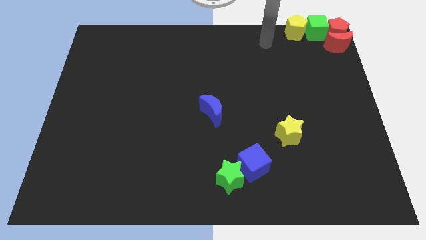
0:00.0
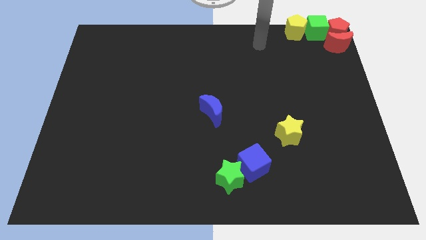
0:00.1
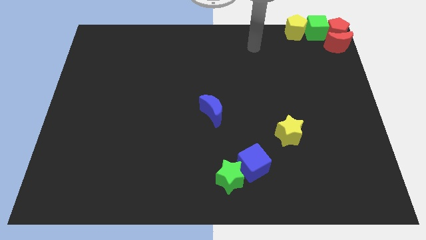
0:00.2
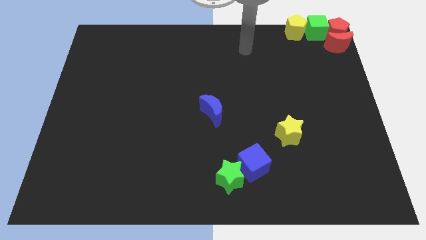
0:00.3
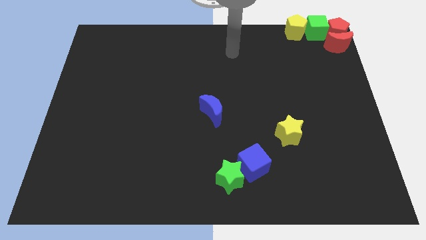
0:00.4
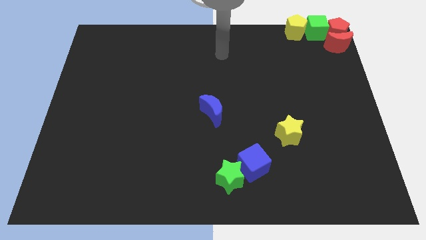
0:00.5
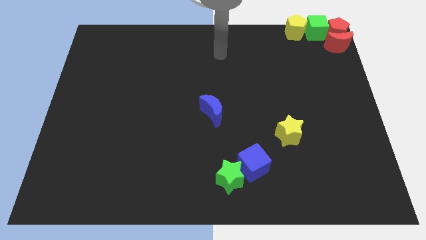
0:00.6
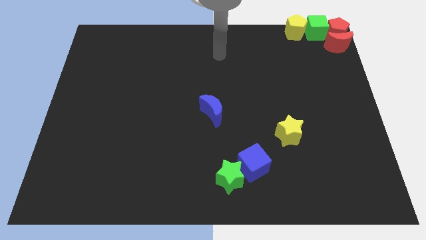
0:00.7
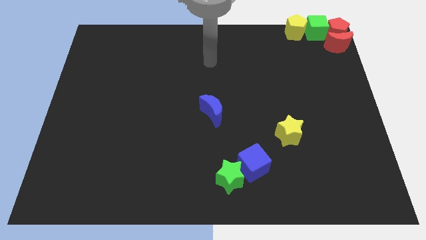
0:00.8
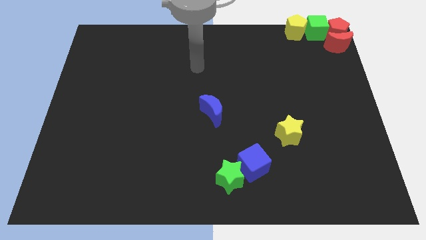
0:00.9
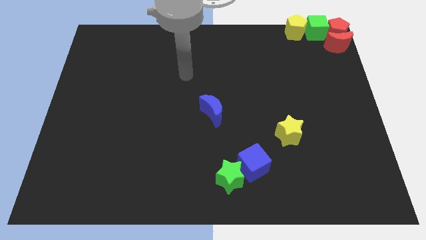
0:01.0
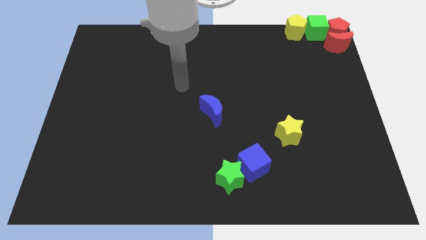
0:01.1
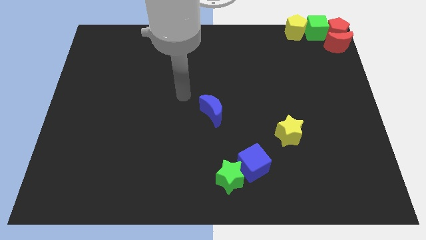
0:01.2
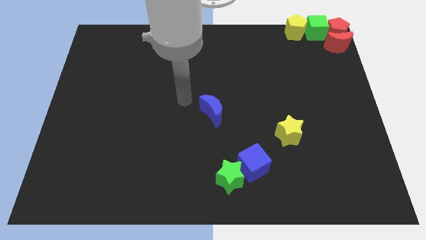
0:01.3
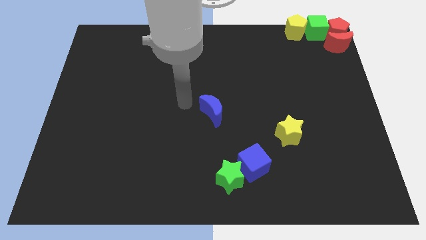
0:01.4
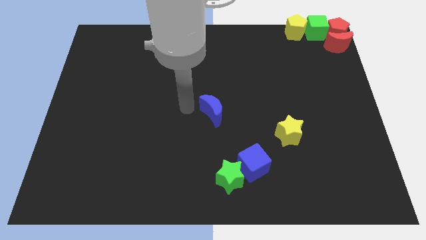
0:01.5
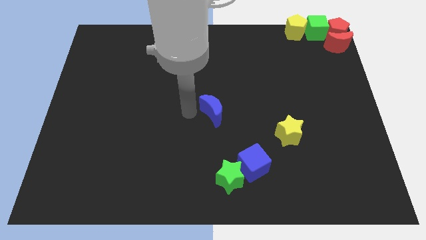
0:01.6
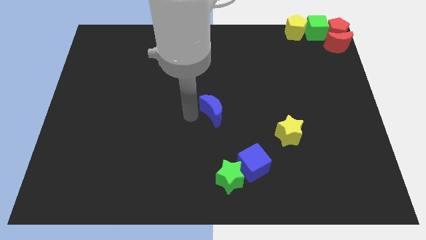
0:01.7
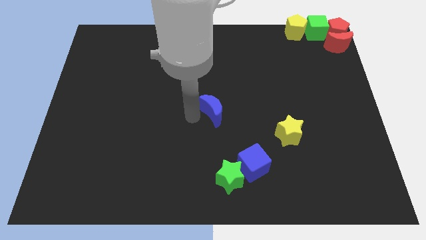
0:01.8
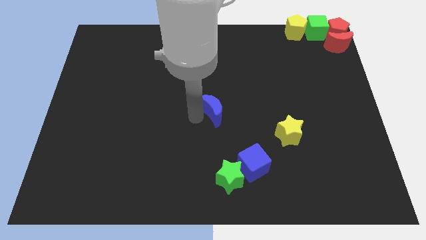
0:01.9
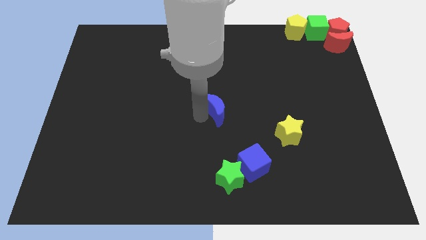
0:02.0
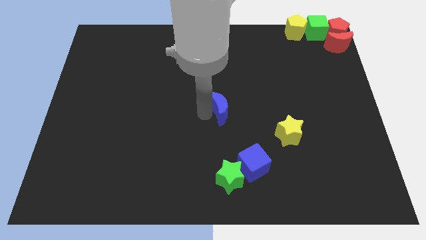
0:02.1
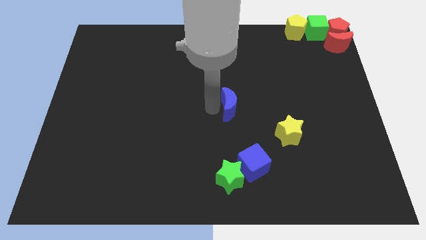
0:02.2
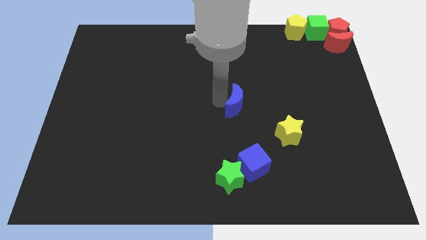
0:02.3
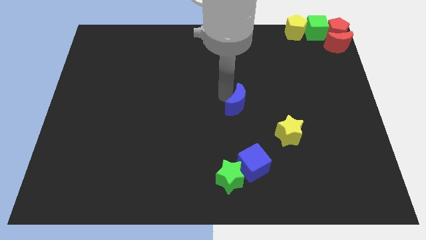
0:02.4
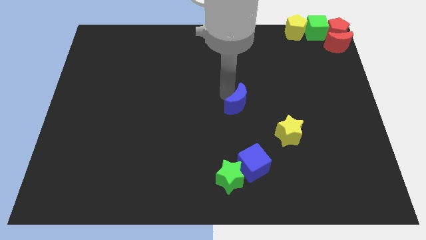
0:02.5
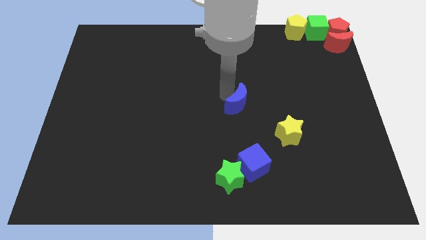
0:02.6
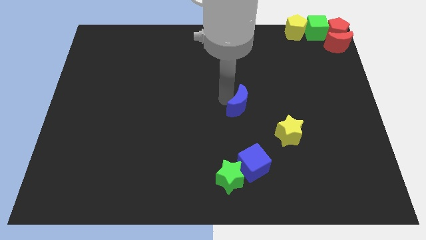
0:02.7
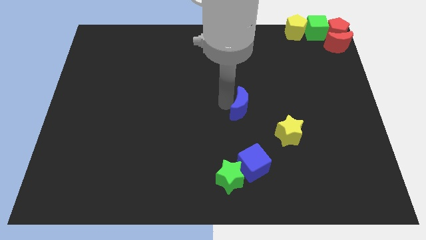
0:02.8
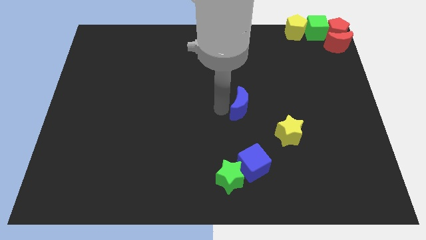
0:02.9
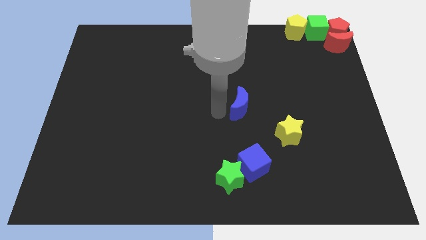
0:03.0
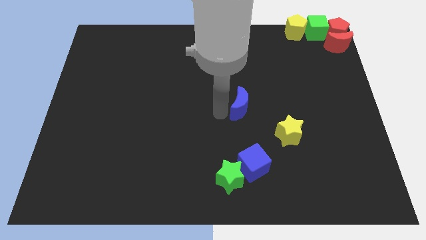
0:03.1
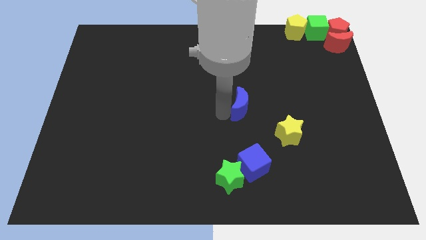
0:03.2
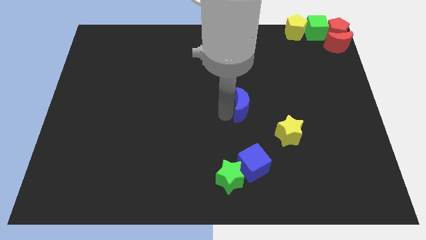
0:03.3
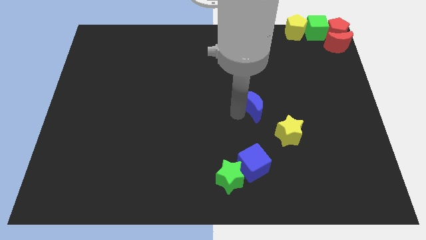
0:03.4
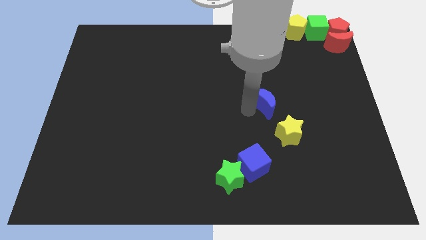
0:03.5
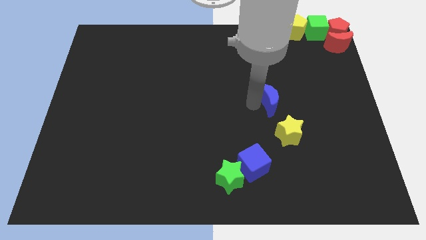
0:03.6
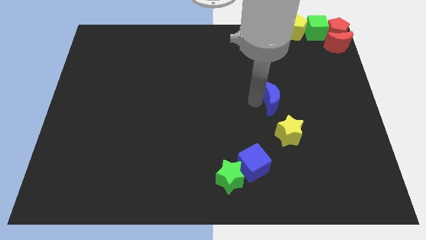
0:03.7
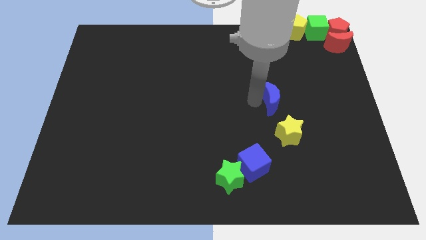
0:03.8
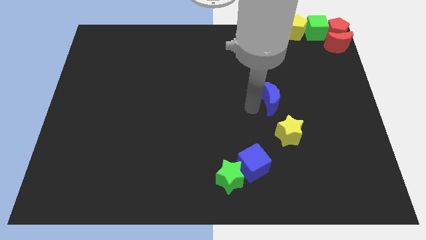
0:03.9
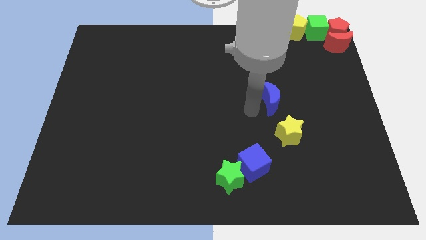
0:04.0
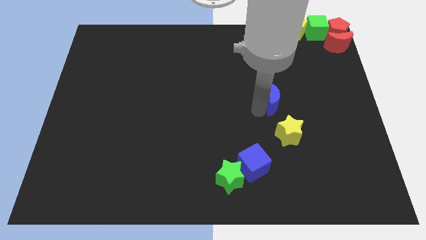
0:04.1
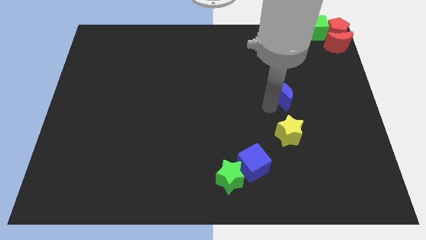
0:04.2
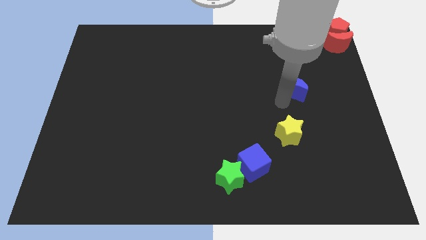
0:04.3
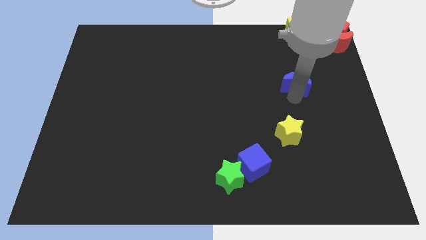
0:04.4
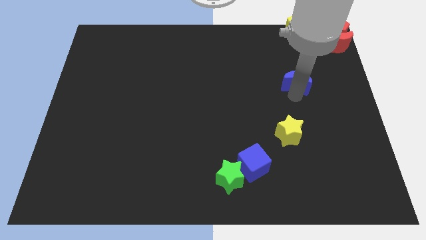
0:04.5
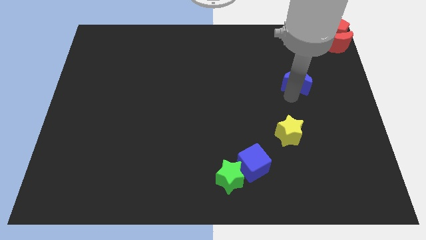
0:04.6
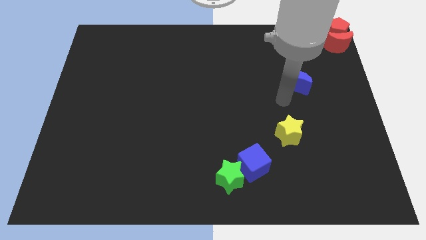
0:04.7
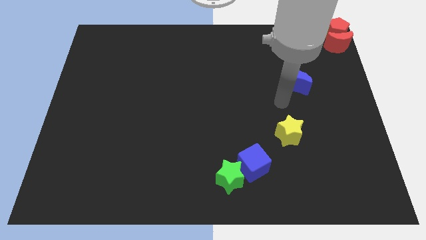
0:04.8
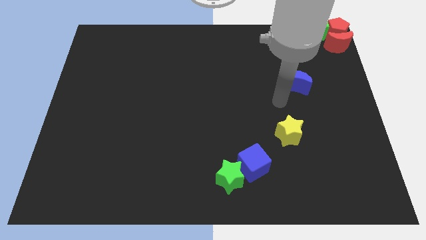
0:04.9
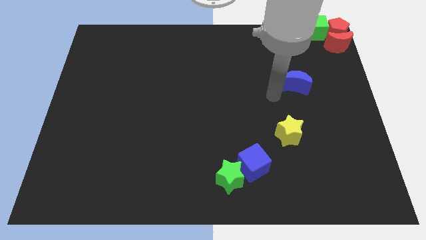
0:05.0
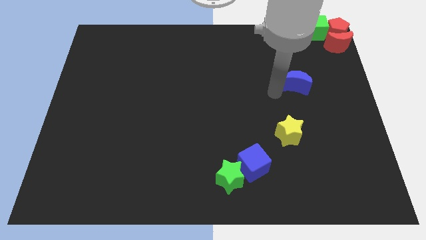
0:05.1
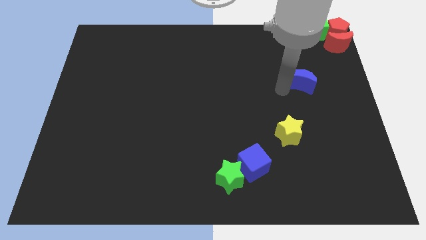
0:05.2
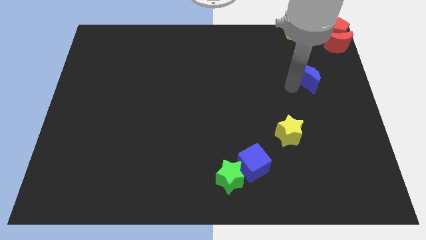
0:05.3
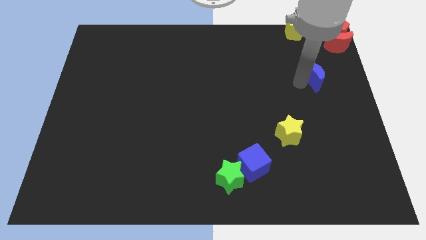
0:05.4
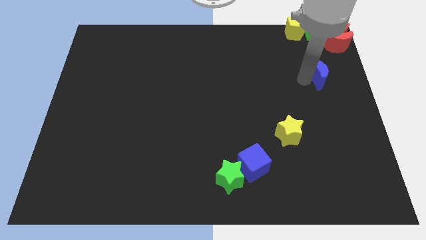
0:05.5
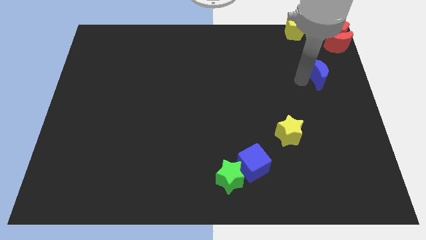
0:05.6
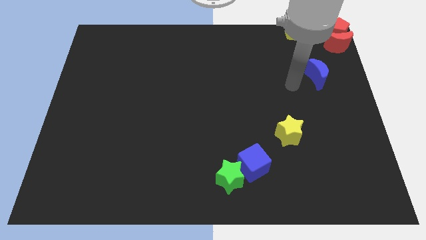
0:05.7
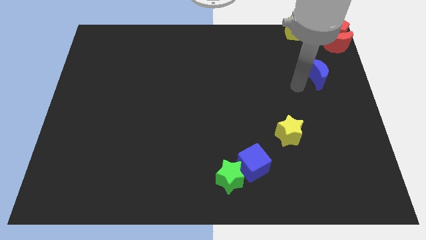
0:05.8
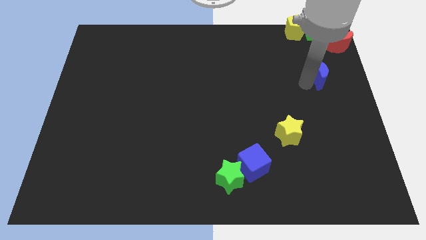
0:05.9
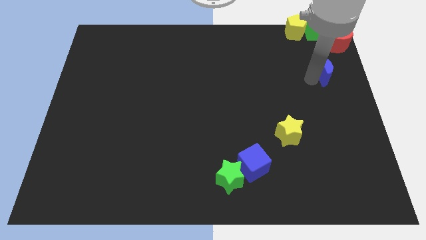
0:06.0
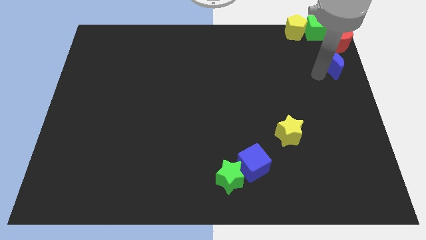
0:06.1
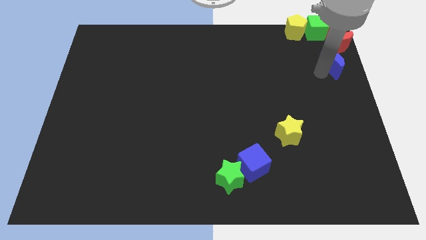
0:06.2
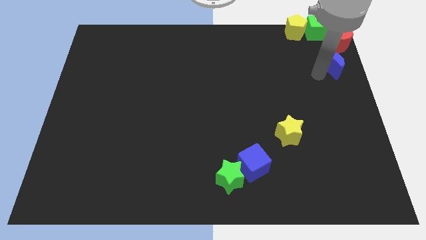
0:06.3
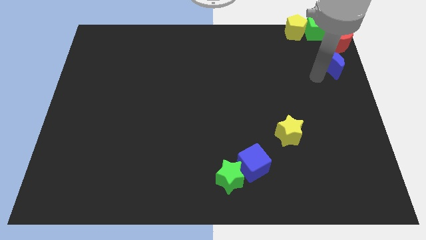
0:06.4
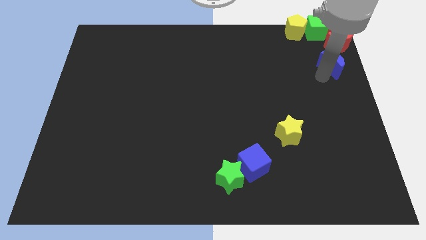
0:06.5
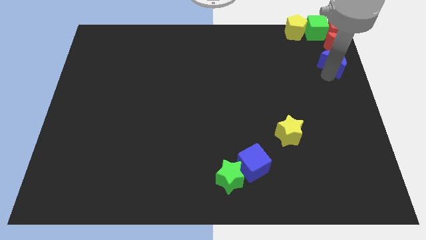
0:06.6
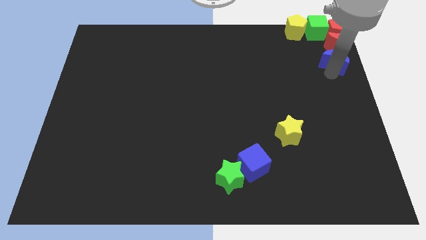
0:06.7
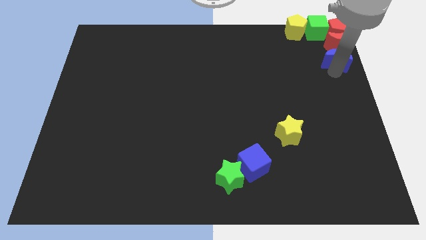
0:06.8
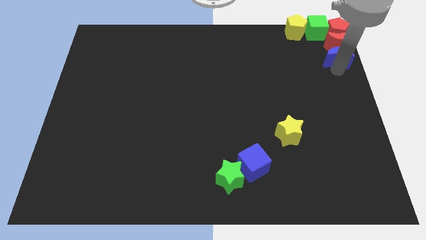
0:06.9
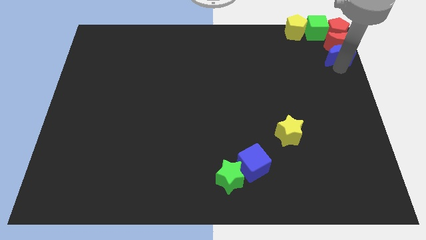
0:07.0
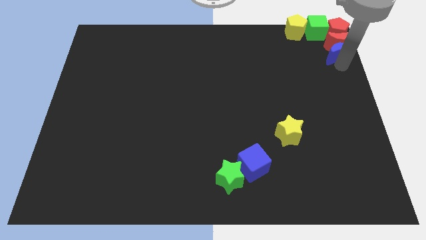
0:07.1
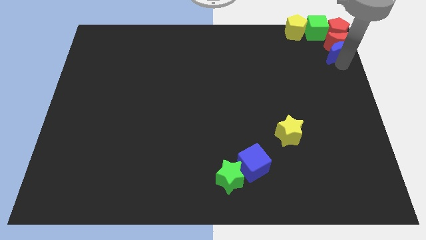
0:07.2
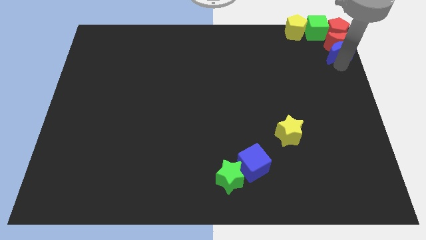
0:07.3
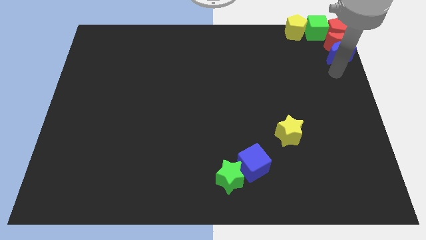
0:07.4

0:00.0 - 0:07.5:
place the blue crescent below the red crescent

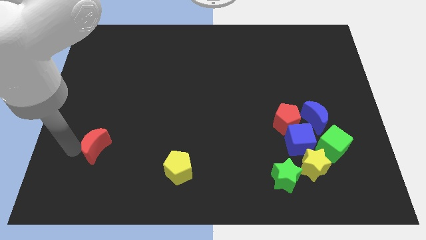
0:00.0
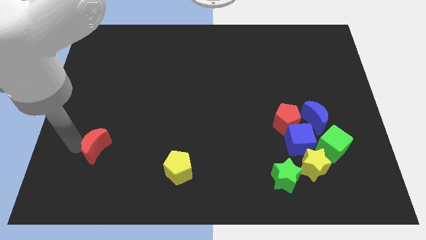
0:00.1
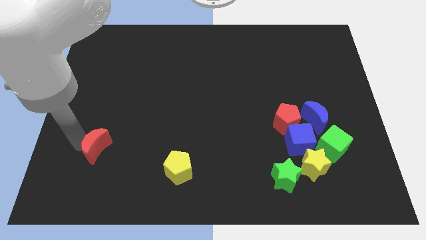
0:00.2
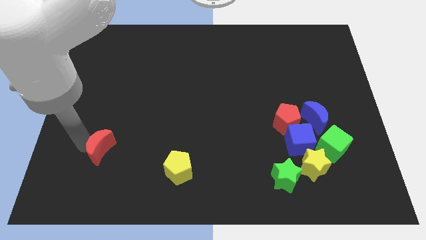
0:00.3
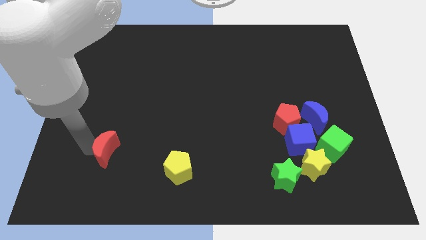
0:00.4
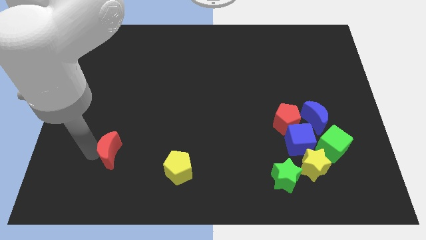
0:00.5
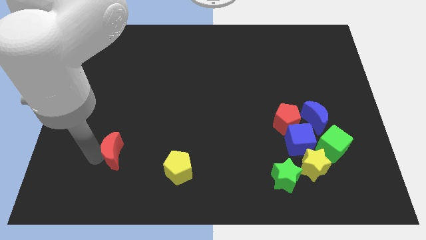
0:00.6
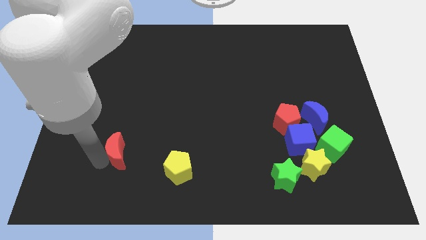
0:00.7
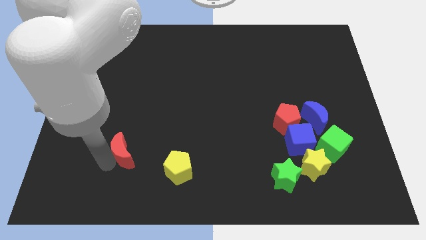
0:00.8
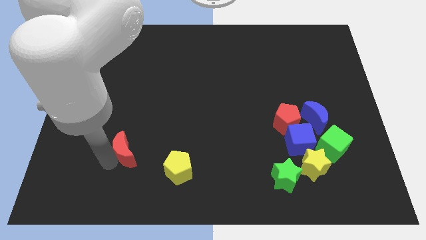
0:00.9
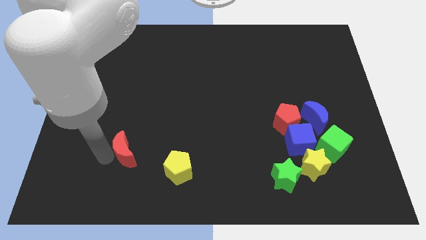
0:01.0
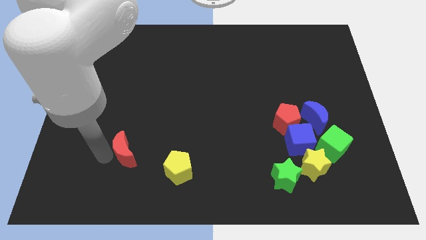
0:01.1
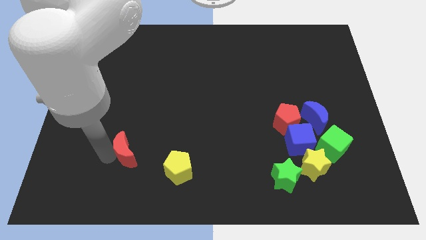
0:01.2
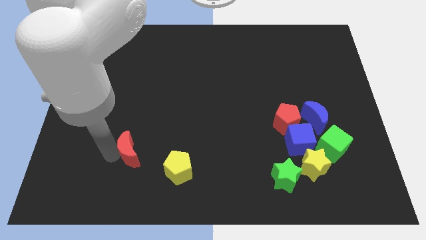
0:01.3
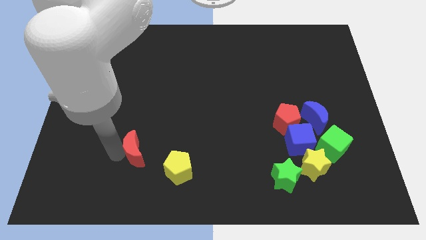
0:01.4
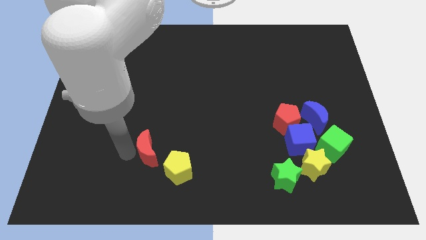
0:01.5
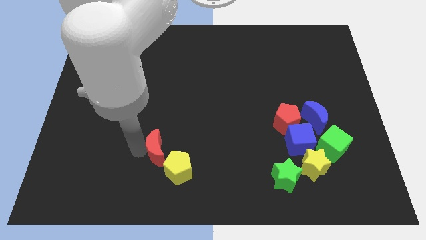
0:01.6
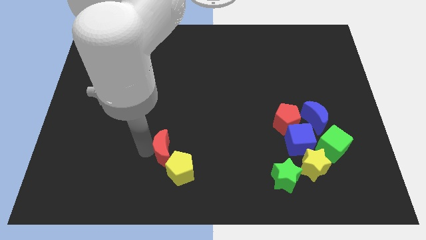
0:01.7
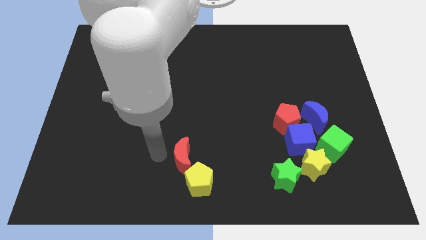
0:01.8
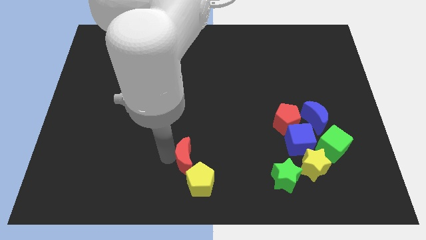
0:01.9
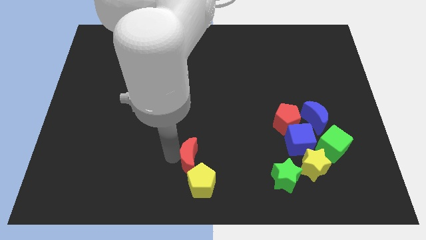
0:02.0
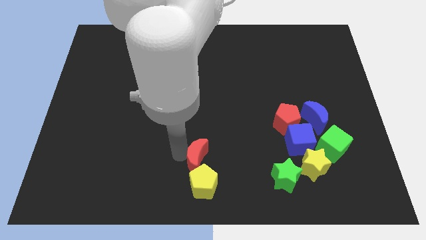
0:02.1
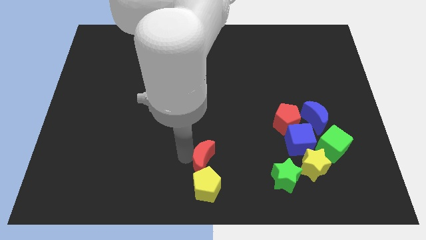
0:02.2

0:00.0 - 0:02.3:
move red moon on top of the yellow pentagon
